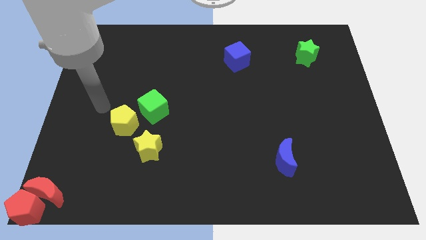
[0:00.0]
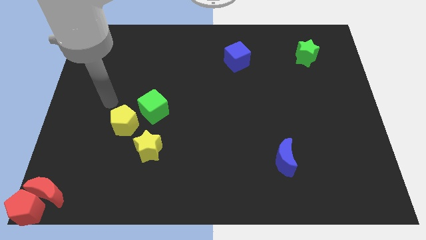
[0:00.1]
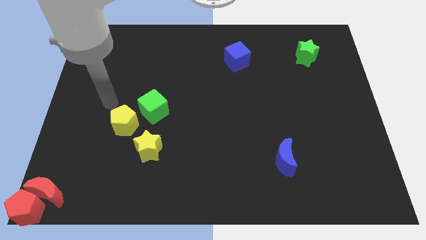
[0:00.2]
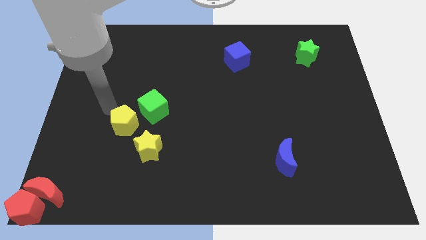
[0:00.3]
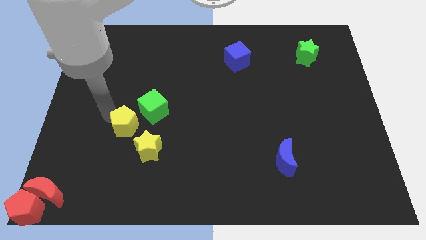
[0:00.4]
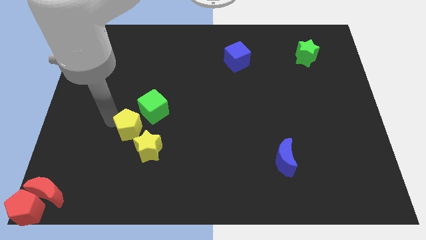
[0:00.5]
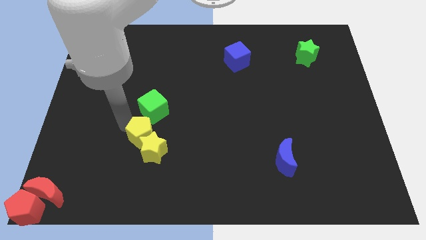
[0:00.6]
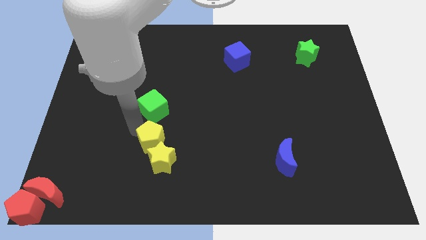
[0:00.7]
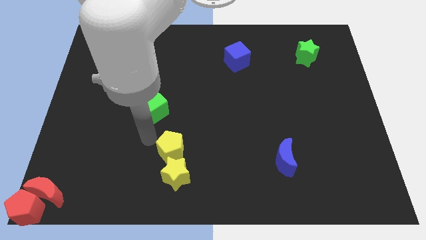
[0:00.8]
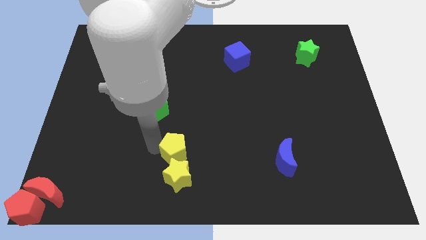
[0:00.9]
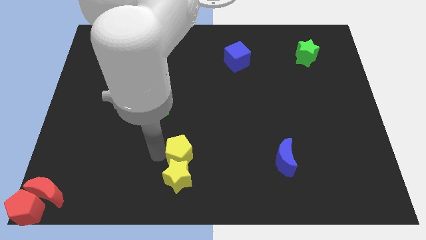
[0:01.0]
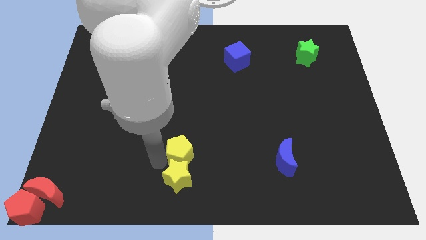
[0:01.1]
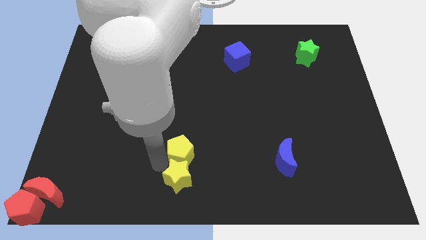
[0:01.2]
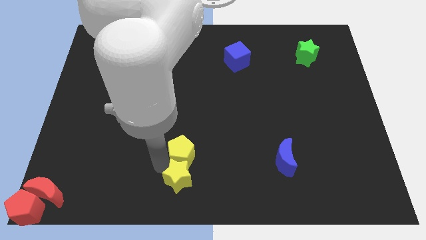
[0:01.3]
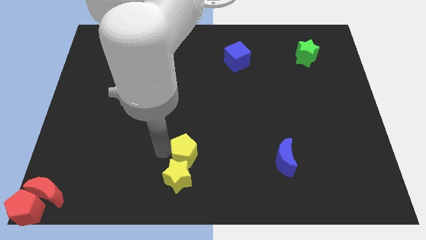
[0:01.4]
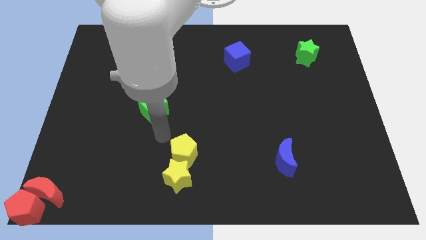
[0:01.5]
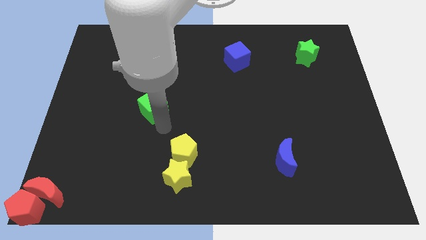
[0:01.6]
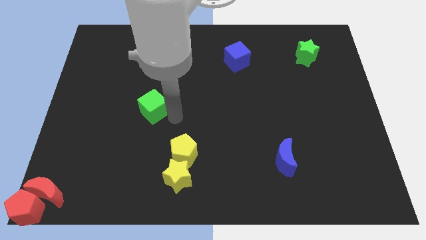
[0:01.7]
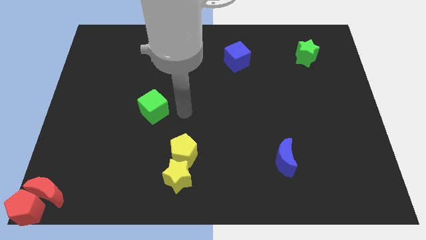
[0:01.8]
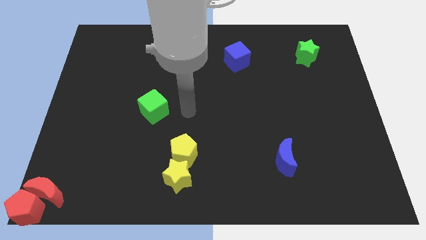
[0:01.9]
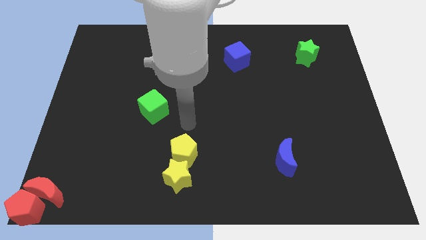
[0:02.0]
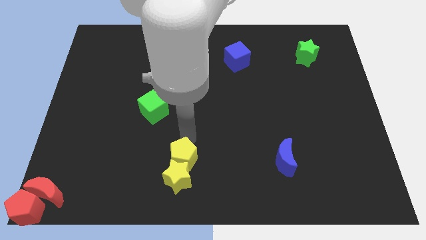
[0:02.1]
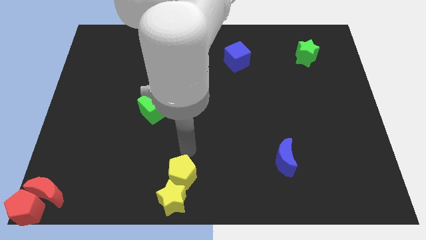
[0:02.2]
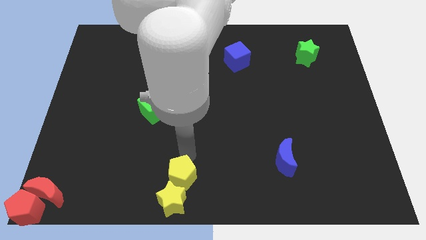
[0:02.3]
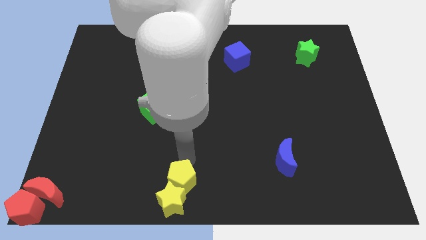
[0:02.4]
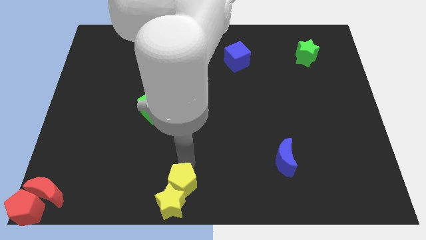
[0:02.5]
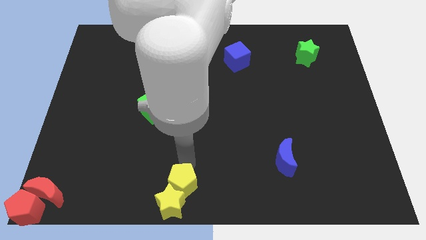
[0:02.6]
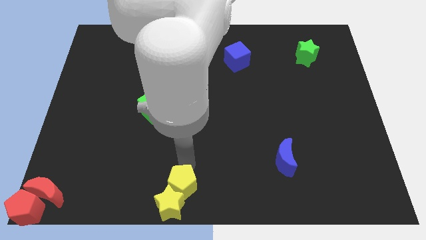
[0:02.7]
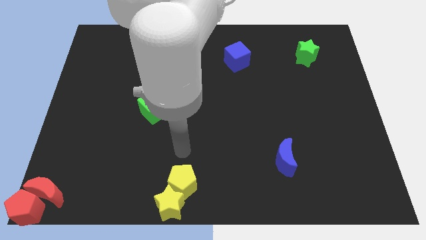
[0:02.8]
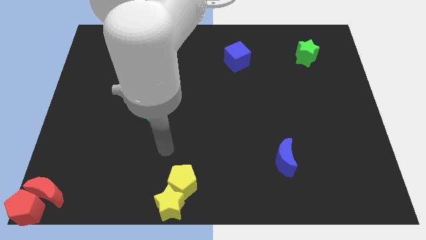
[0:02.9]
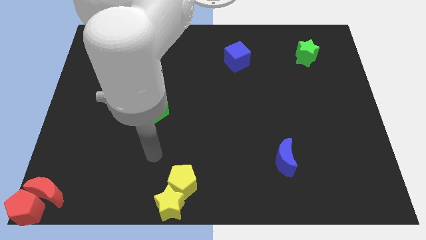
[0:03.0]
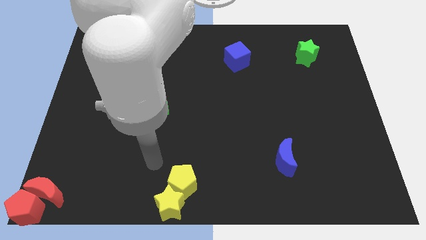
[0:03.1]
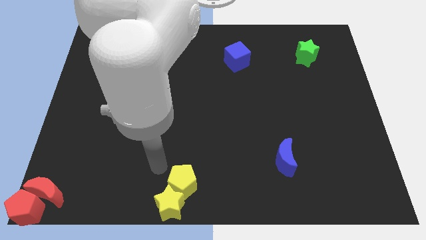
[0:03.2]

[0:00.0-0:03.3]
push the yellow star towards the bottom center with the yellow pentagon

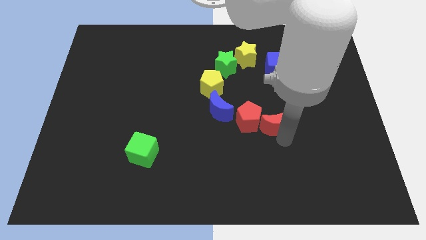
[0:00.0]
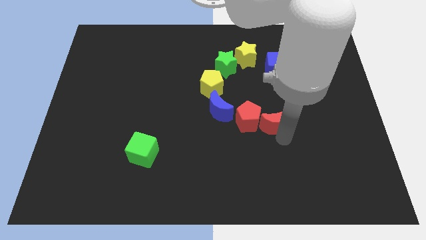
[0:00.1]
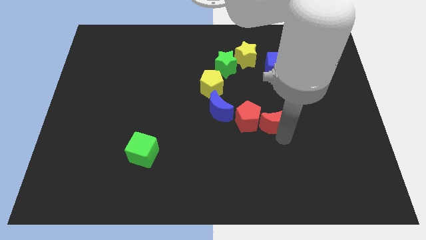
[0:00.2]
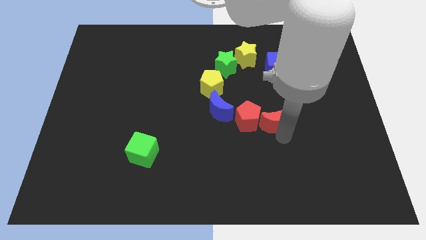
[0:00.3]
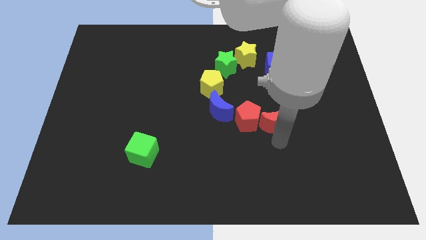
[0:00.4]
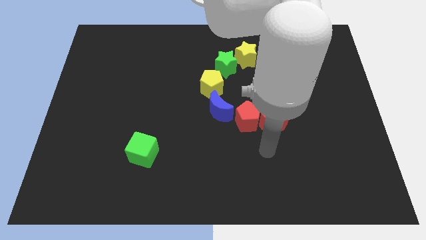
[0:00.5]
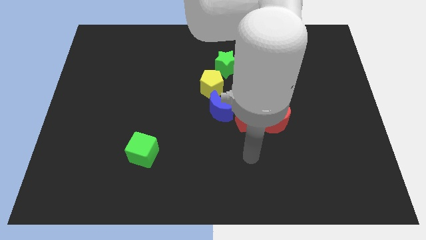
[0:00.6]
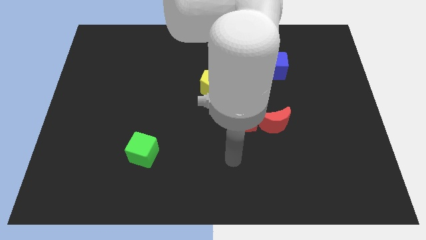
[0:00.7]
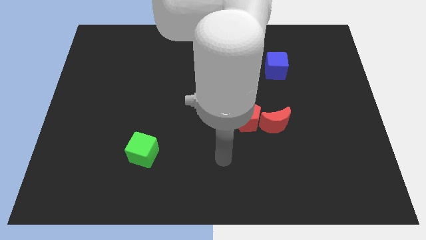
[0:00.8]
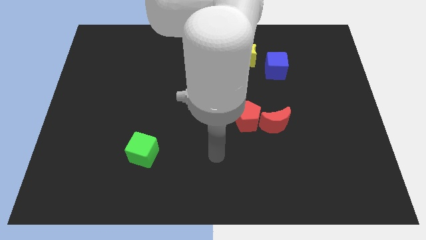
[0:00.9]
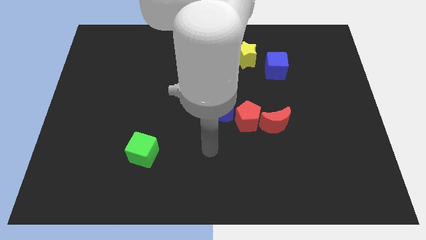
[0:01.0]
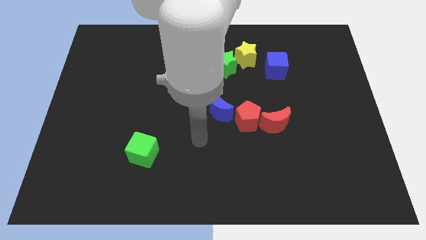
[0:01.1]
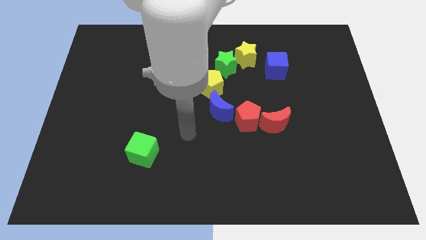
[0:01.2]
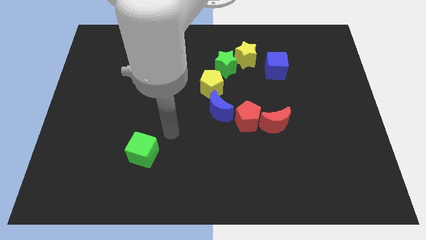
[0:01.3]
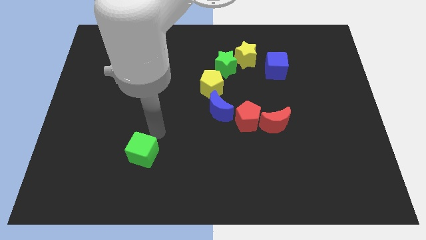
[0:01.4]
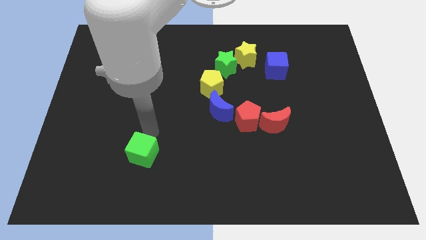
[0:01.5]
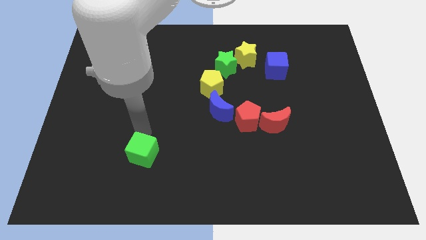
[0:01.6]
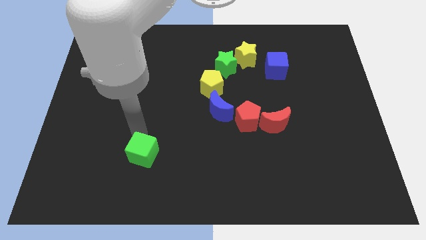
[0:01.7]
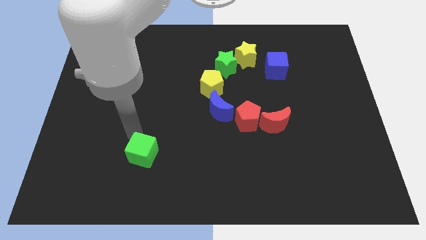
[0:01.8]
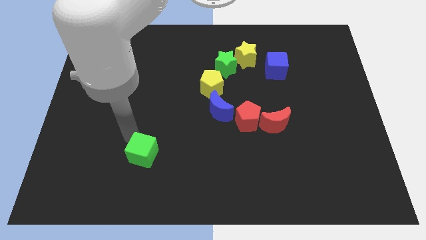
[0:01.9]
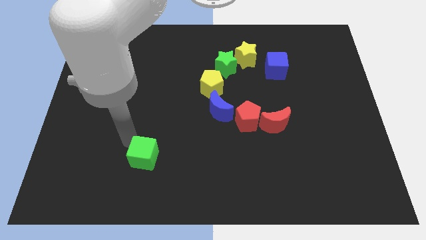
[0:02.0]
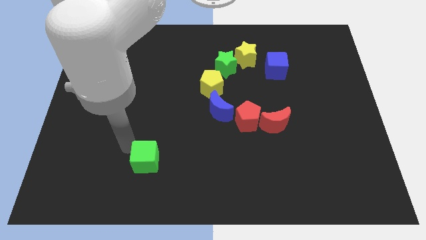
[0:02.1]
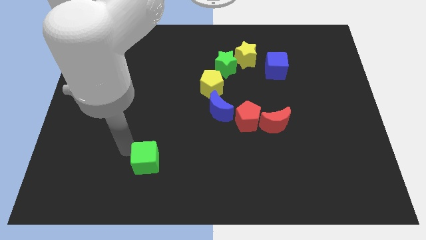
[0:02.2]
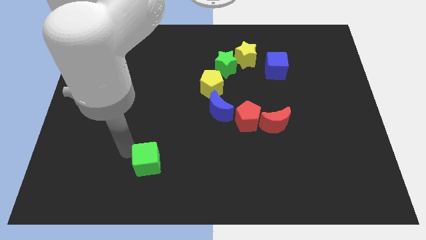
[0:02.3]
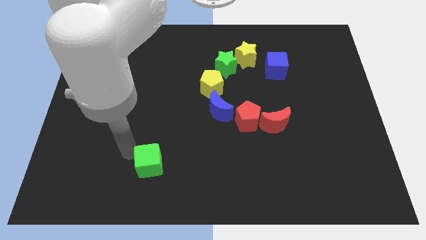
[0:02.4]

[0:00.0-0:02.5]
move the arm to the green cube

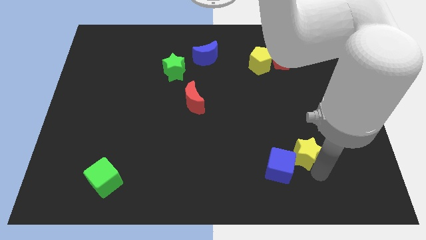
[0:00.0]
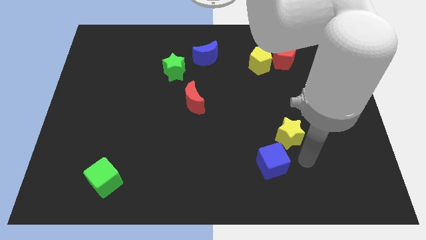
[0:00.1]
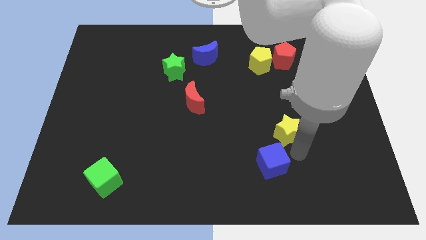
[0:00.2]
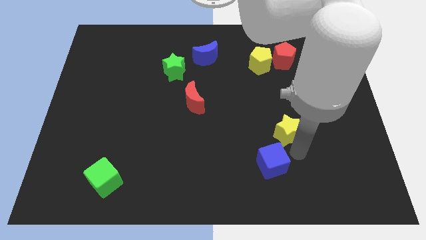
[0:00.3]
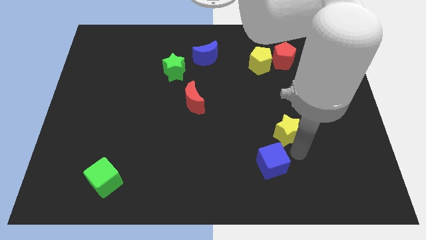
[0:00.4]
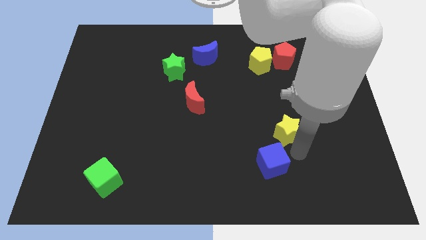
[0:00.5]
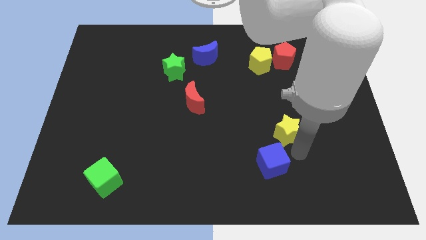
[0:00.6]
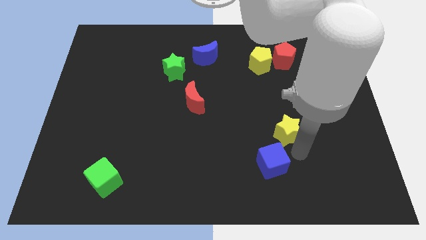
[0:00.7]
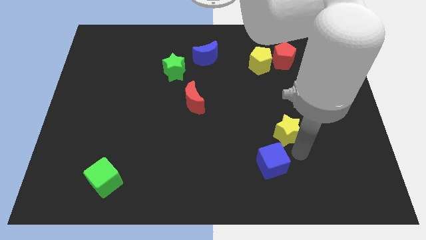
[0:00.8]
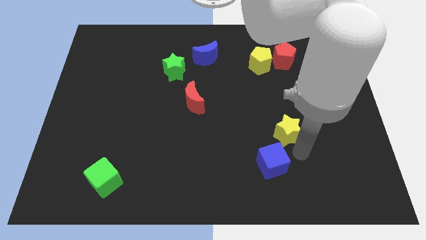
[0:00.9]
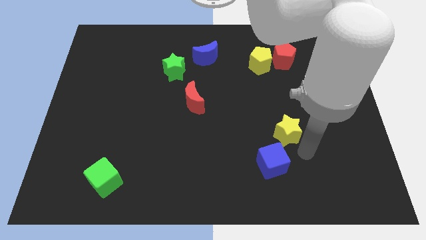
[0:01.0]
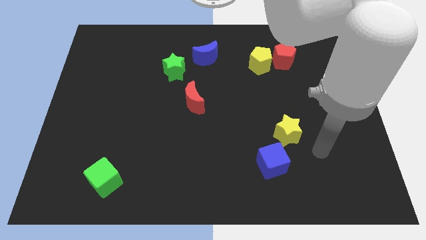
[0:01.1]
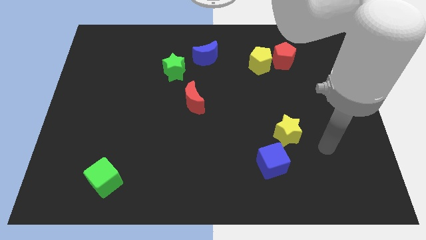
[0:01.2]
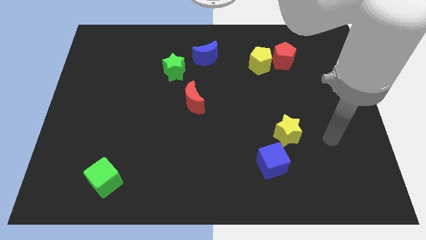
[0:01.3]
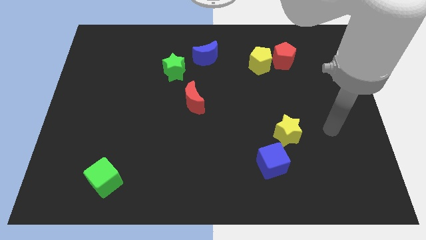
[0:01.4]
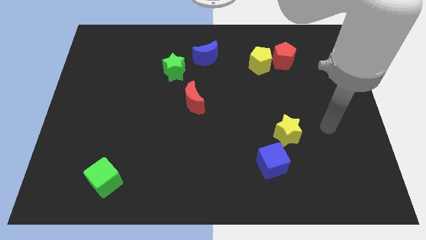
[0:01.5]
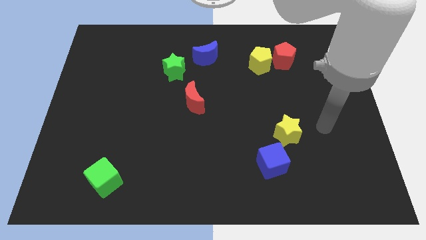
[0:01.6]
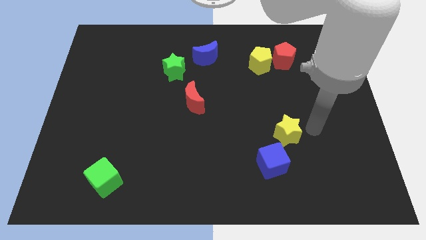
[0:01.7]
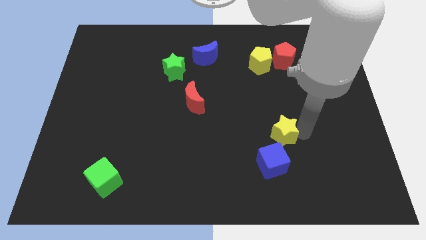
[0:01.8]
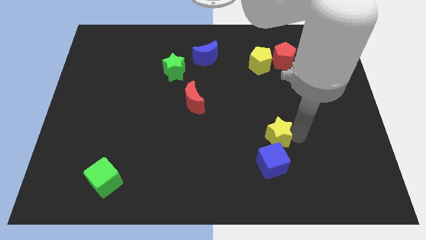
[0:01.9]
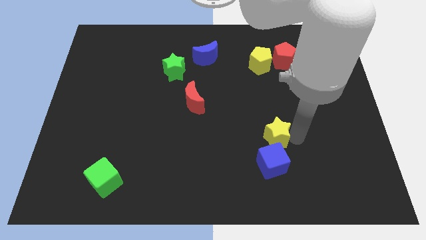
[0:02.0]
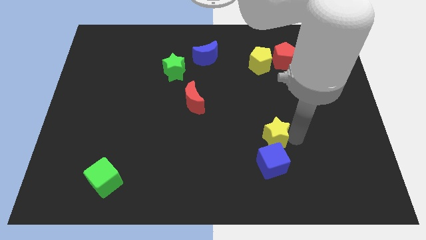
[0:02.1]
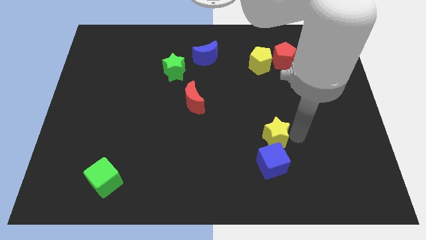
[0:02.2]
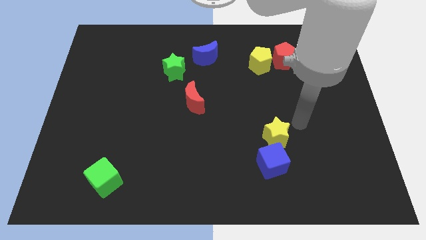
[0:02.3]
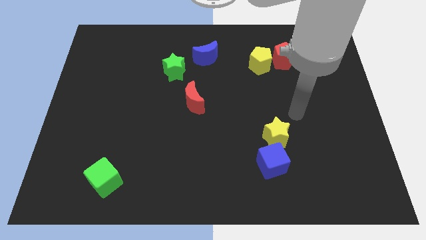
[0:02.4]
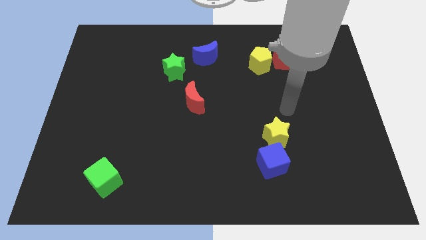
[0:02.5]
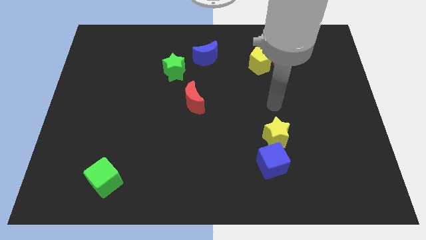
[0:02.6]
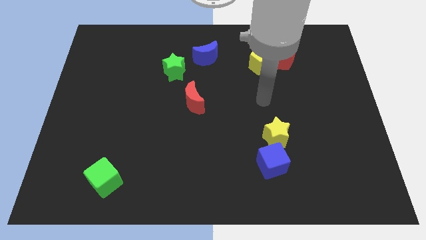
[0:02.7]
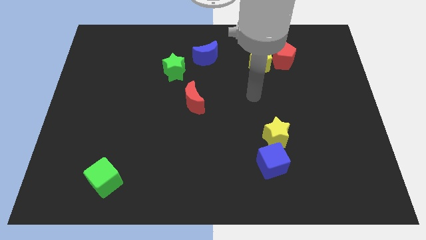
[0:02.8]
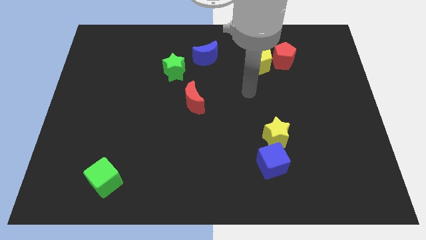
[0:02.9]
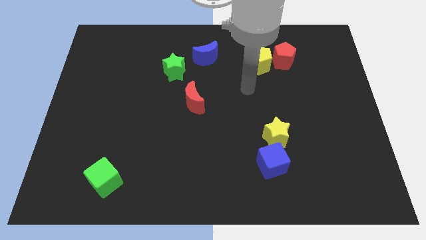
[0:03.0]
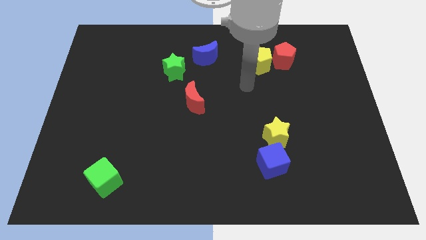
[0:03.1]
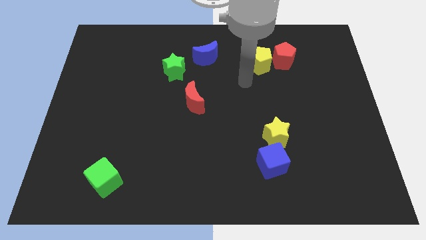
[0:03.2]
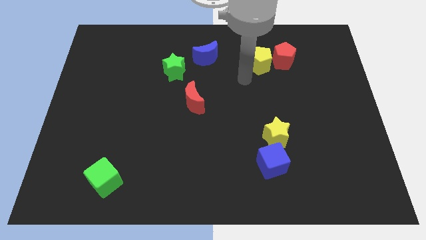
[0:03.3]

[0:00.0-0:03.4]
move the yellow star right above the blue cube
